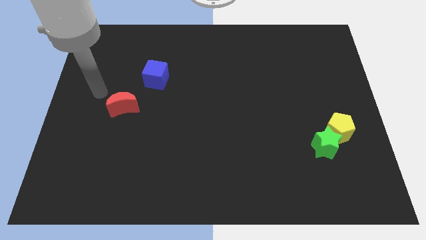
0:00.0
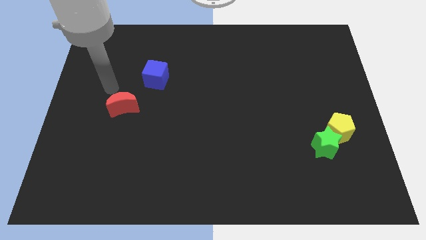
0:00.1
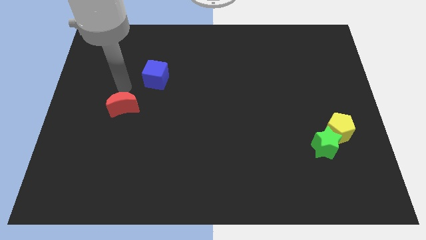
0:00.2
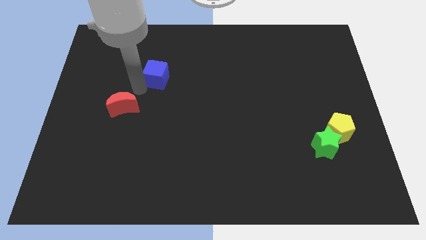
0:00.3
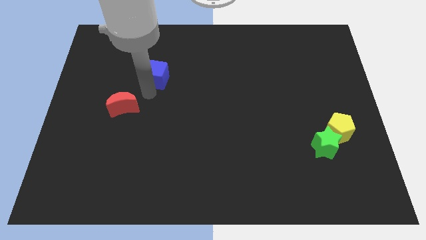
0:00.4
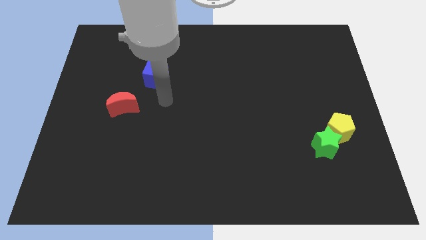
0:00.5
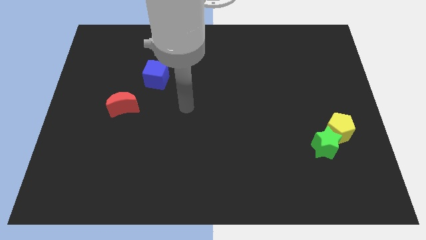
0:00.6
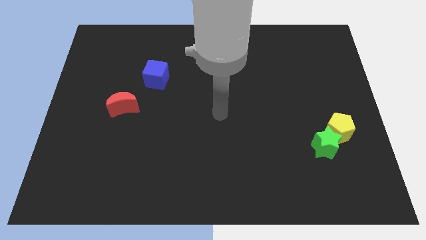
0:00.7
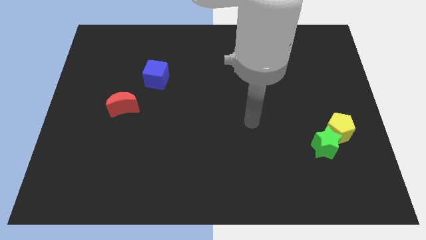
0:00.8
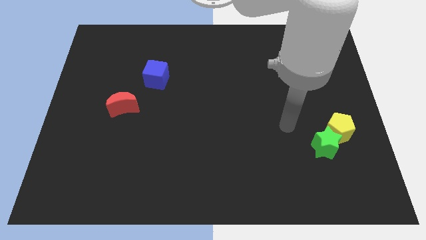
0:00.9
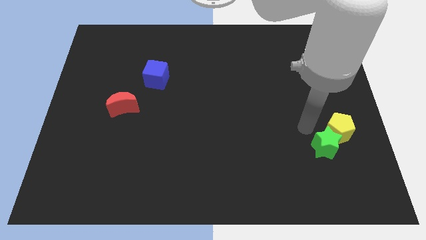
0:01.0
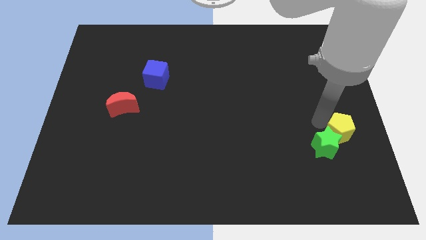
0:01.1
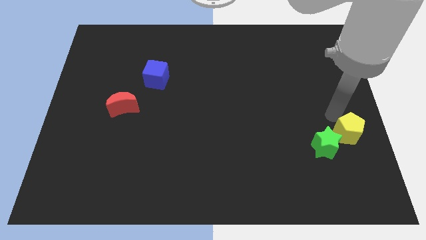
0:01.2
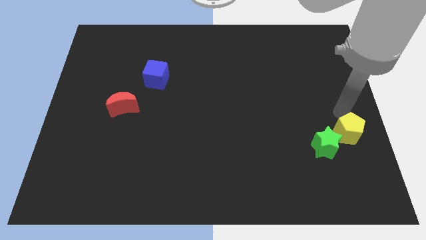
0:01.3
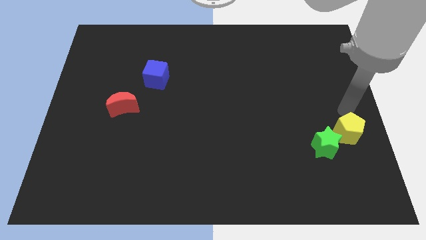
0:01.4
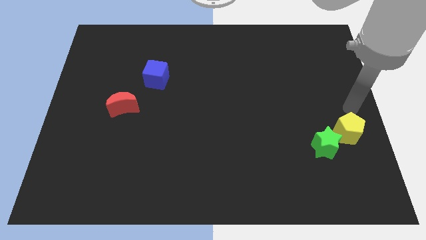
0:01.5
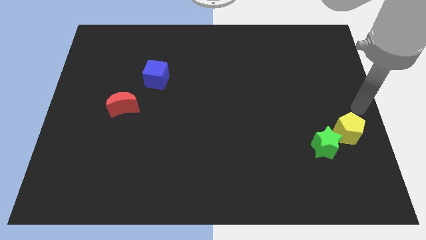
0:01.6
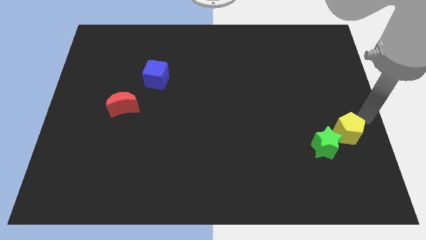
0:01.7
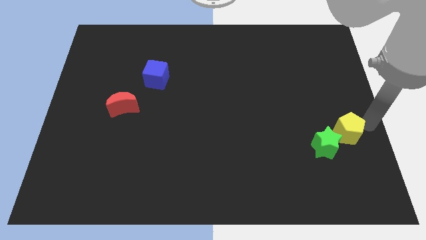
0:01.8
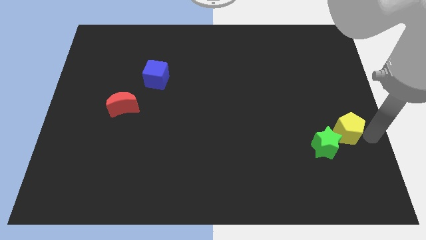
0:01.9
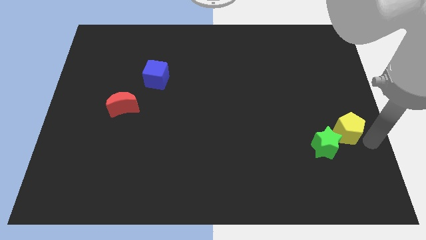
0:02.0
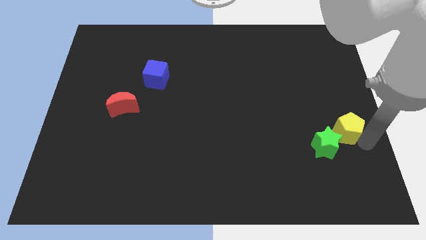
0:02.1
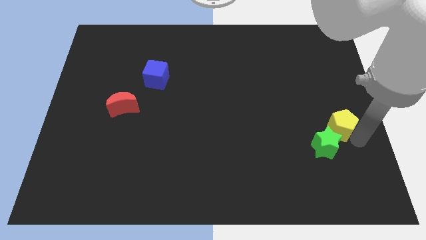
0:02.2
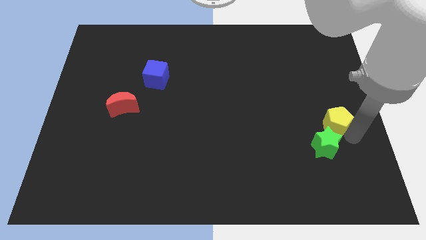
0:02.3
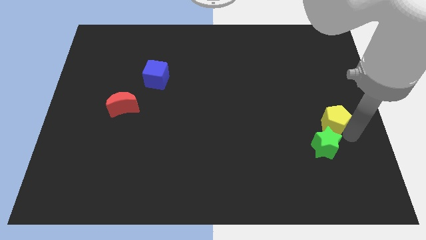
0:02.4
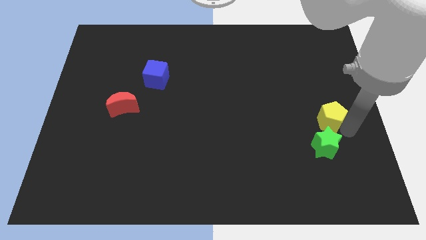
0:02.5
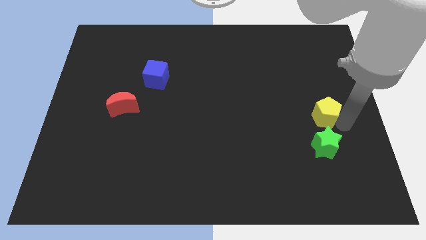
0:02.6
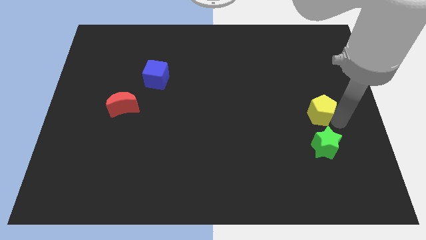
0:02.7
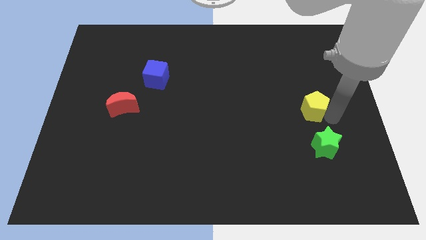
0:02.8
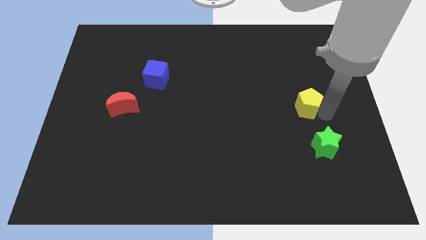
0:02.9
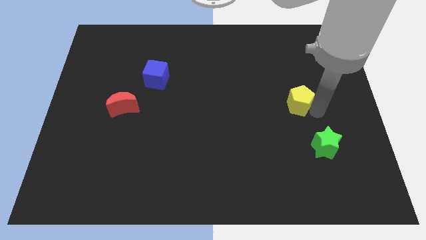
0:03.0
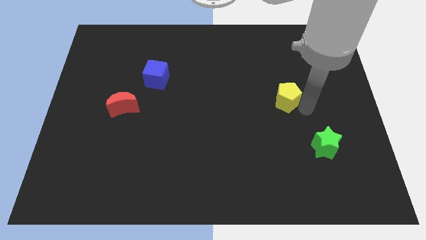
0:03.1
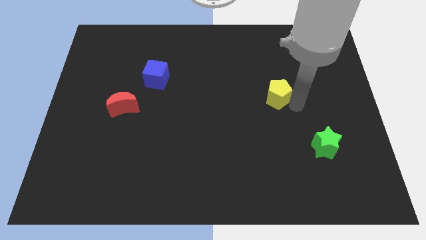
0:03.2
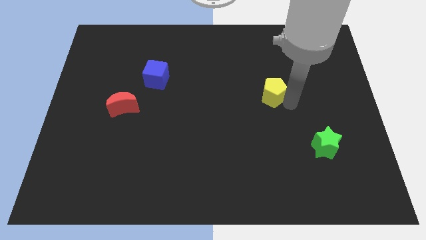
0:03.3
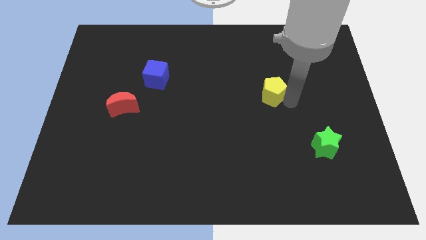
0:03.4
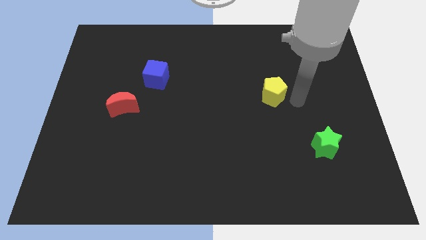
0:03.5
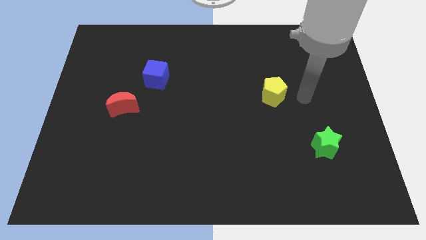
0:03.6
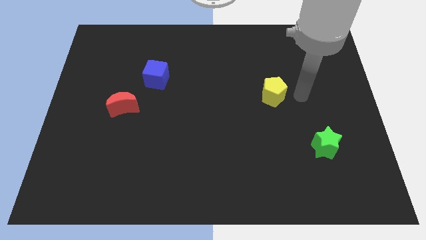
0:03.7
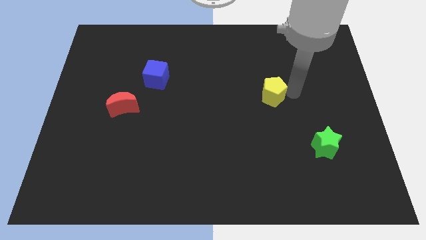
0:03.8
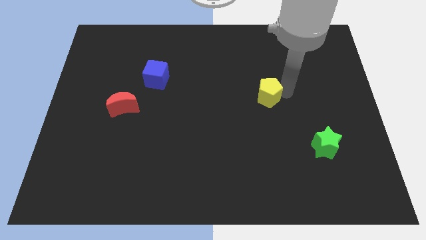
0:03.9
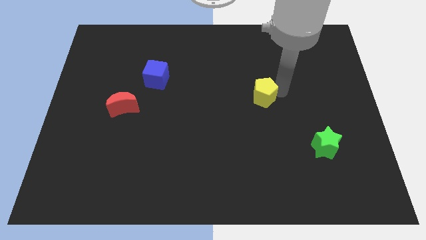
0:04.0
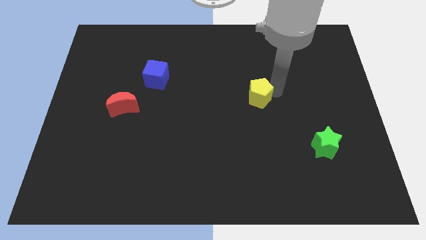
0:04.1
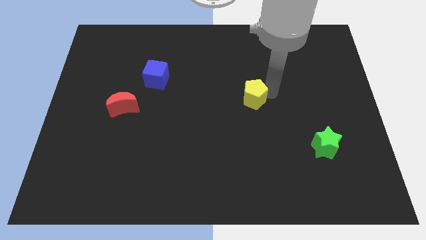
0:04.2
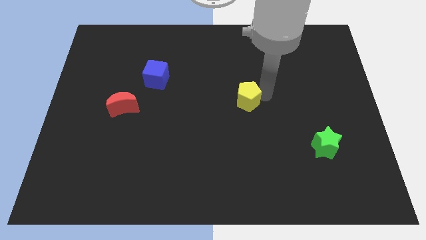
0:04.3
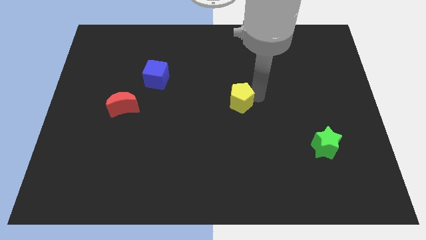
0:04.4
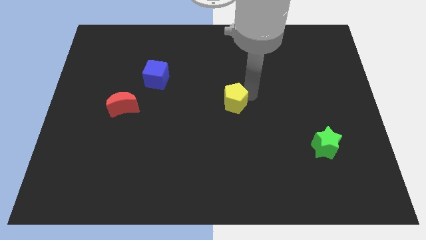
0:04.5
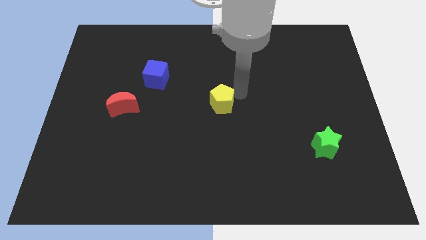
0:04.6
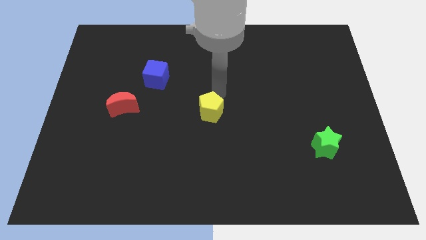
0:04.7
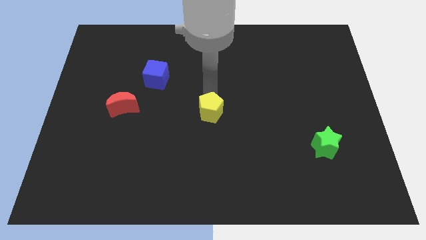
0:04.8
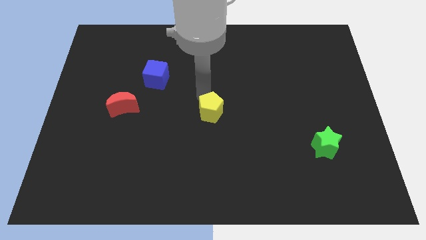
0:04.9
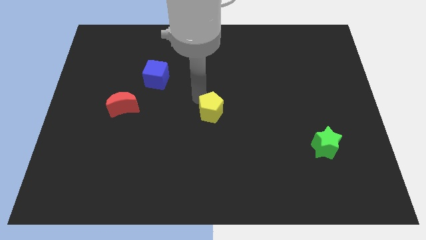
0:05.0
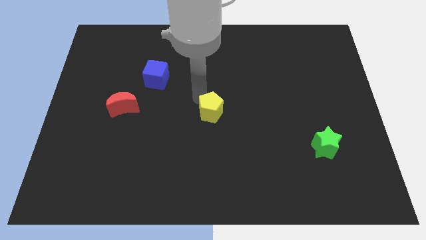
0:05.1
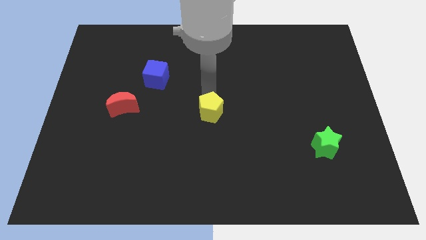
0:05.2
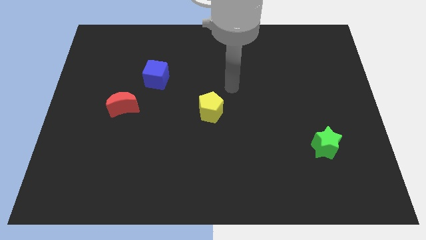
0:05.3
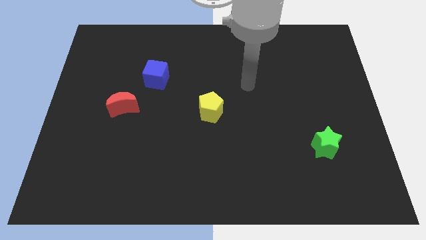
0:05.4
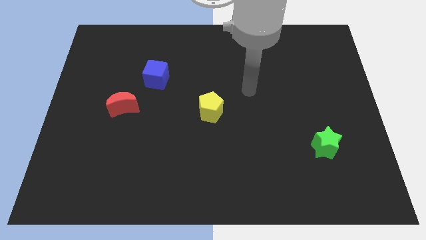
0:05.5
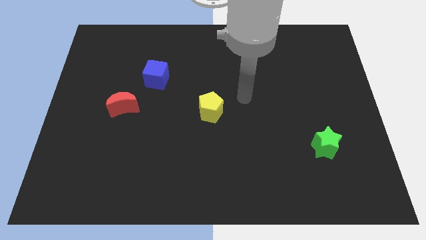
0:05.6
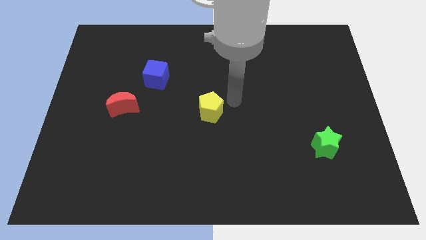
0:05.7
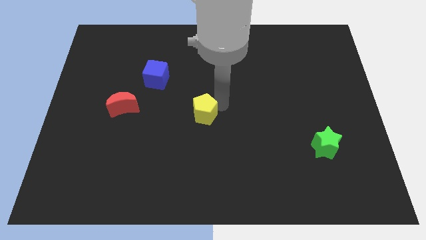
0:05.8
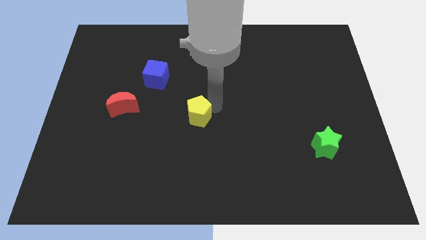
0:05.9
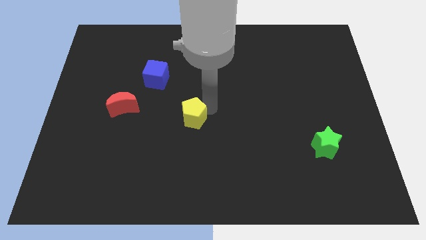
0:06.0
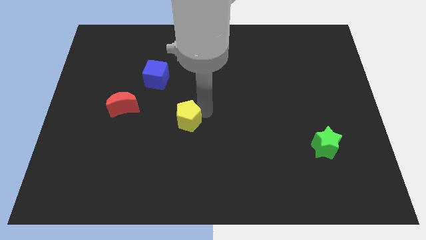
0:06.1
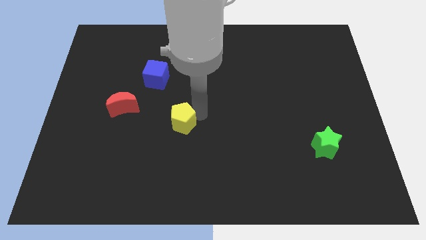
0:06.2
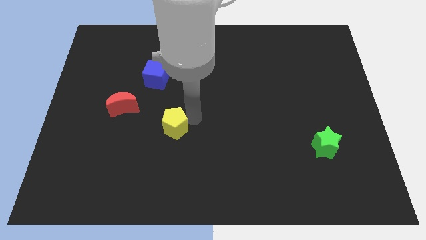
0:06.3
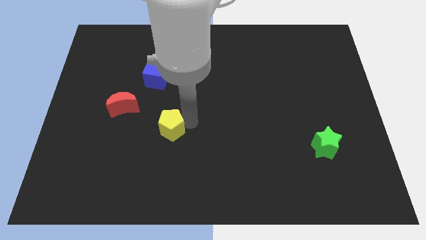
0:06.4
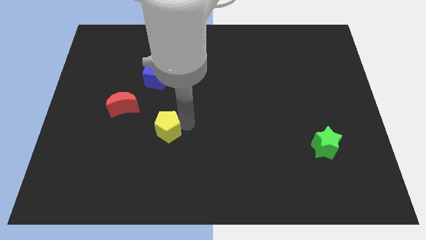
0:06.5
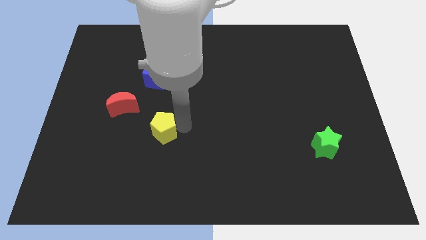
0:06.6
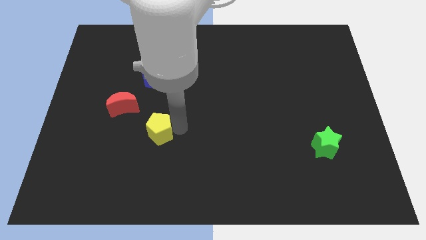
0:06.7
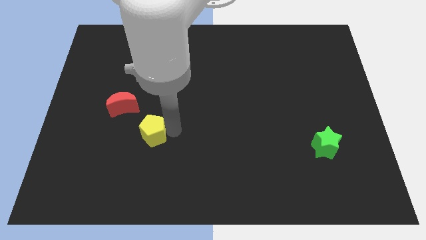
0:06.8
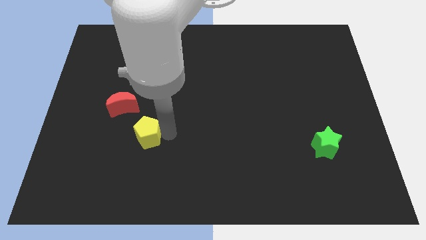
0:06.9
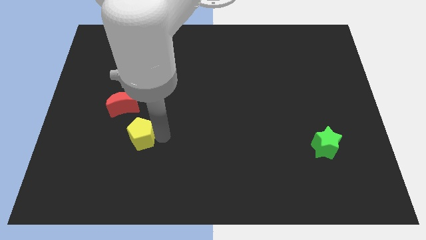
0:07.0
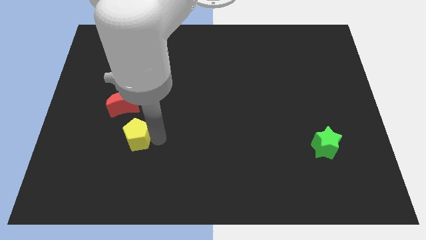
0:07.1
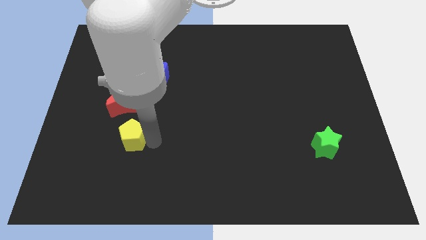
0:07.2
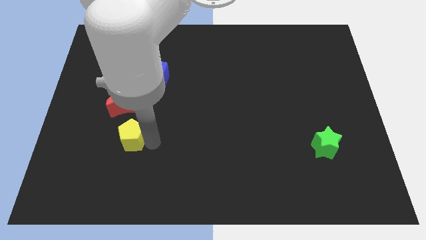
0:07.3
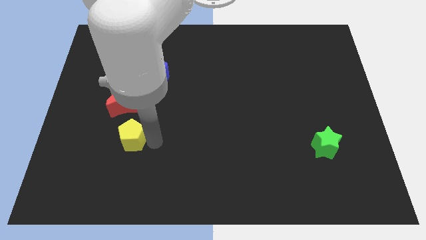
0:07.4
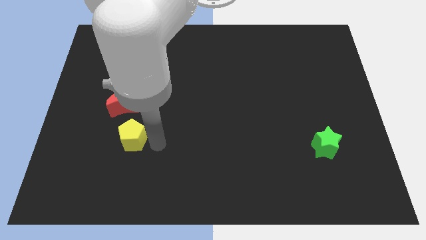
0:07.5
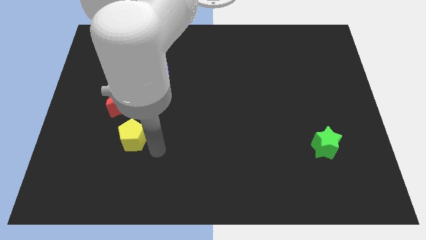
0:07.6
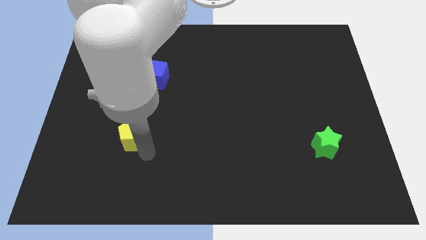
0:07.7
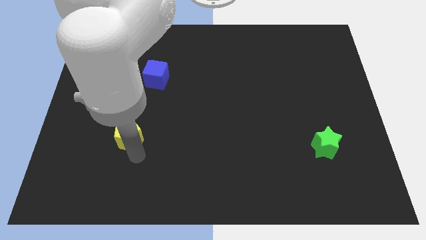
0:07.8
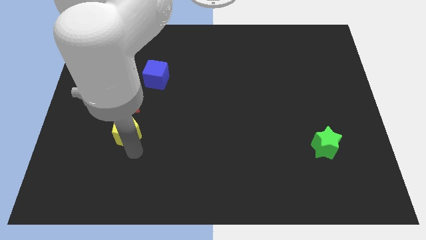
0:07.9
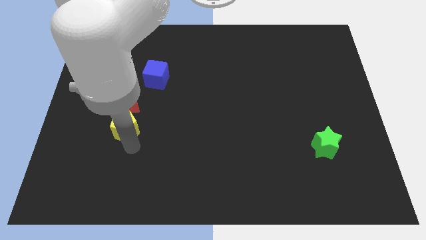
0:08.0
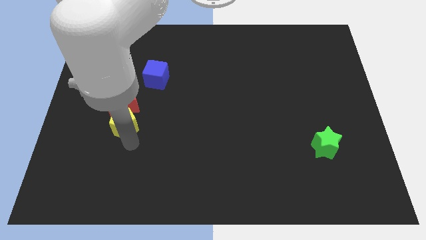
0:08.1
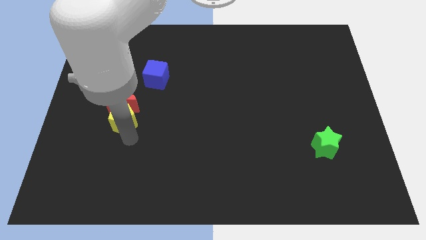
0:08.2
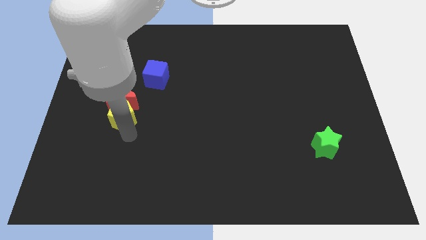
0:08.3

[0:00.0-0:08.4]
put the yellow pentagon next to the red moon

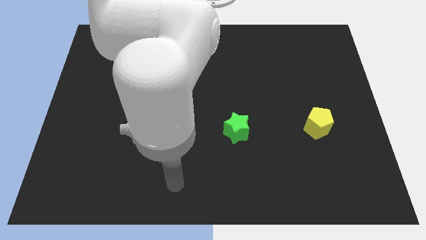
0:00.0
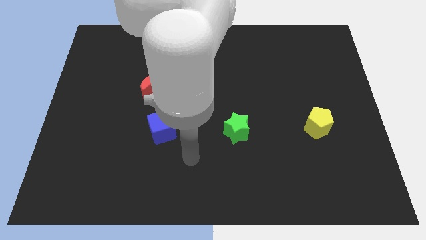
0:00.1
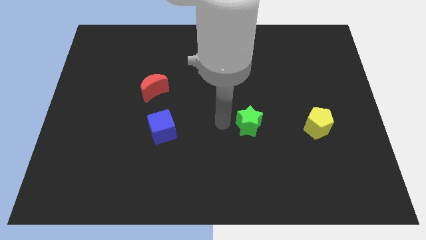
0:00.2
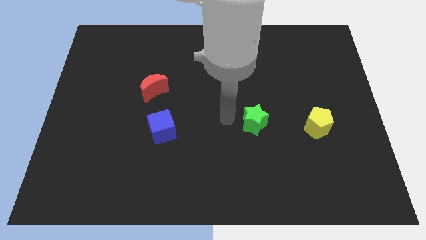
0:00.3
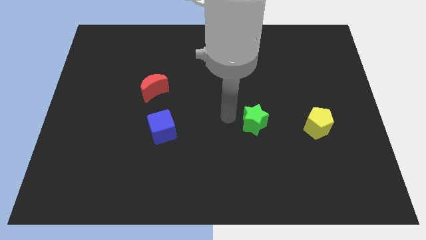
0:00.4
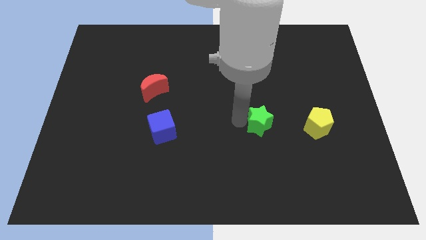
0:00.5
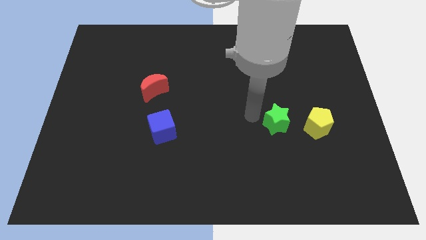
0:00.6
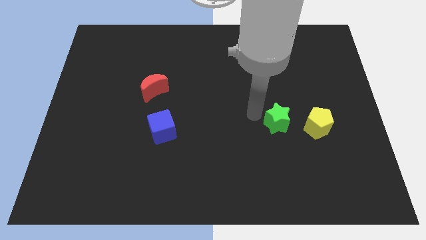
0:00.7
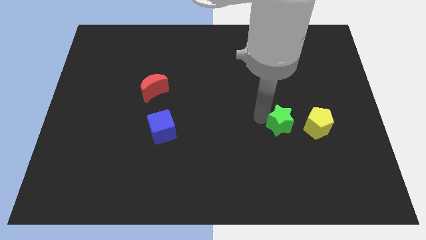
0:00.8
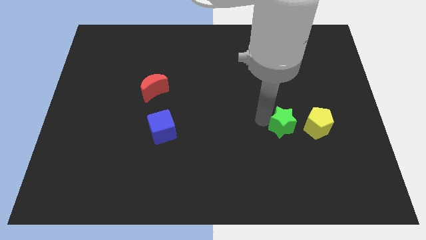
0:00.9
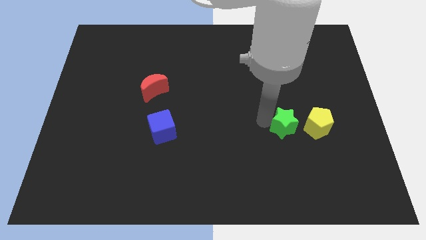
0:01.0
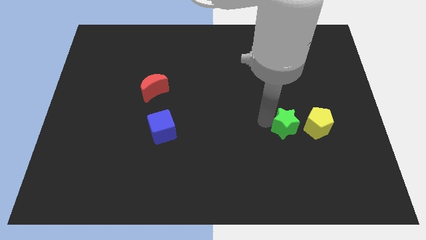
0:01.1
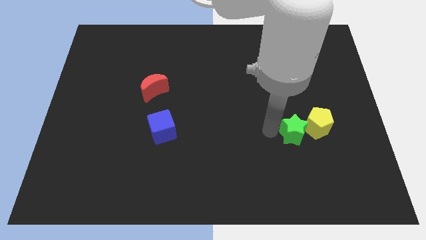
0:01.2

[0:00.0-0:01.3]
push the green block towards the pentagon
